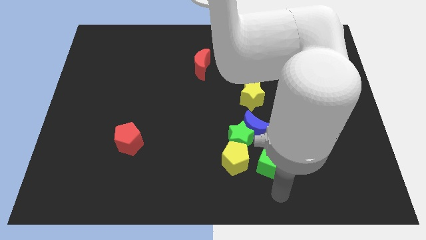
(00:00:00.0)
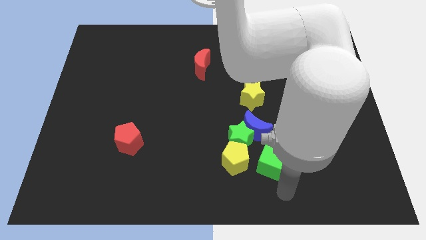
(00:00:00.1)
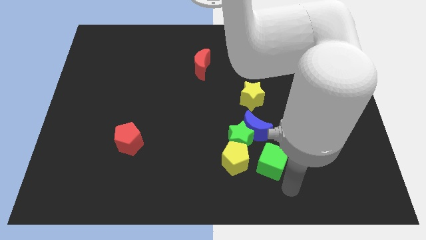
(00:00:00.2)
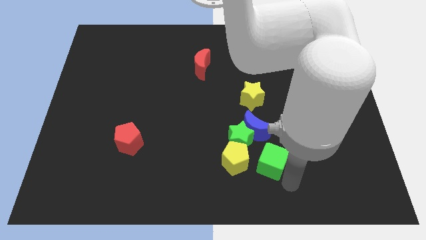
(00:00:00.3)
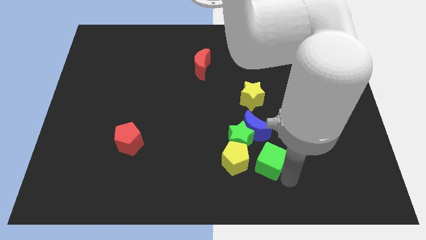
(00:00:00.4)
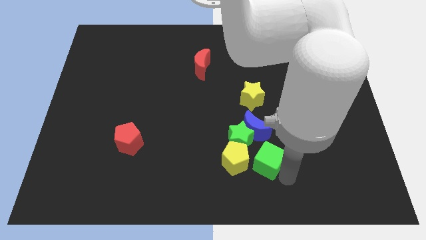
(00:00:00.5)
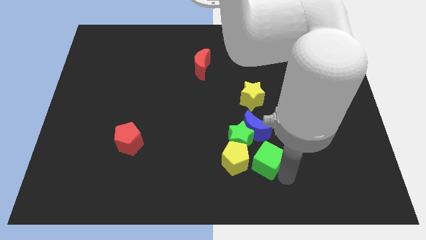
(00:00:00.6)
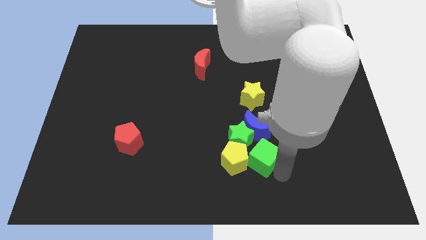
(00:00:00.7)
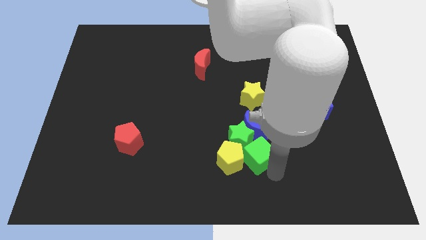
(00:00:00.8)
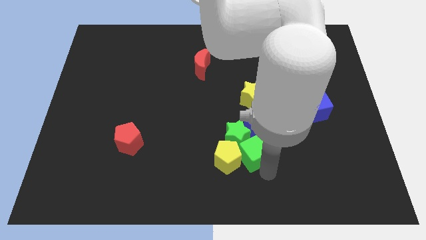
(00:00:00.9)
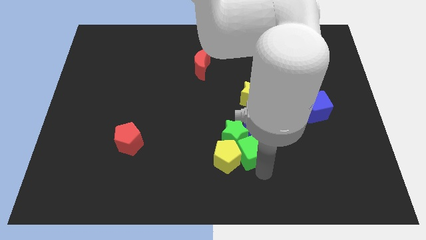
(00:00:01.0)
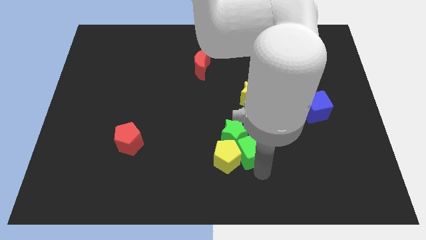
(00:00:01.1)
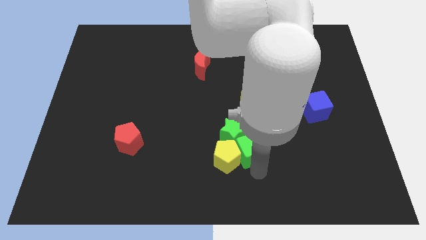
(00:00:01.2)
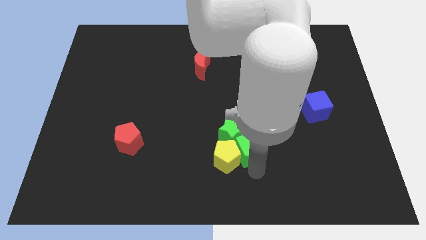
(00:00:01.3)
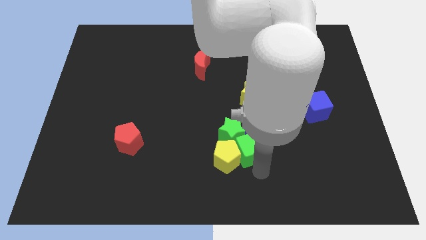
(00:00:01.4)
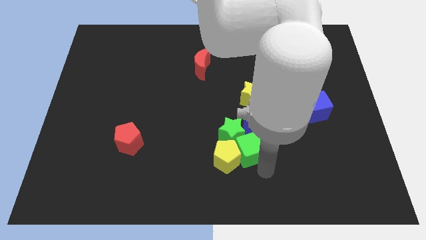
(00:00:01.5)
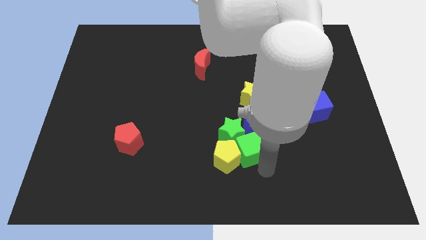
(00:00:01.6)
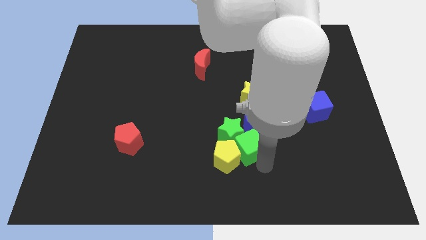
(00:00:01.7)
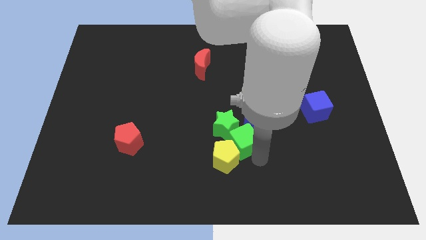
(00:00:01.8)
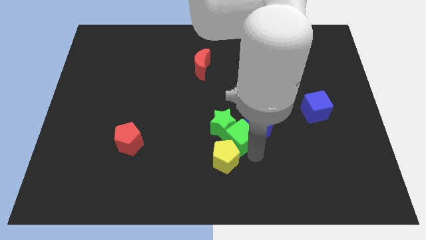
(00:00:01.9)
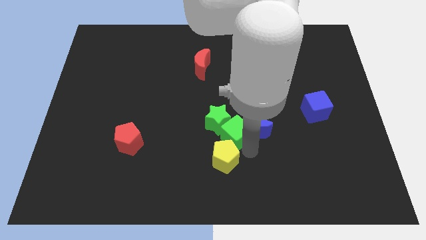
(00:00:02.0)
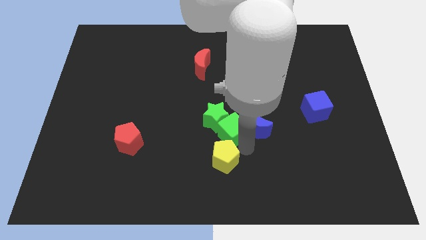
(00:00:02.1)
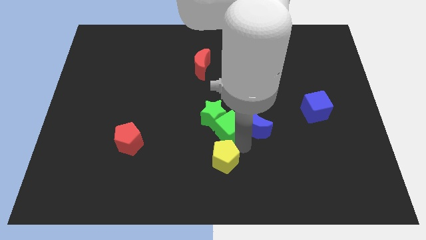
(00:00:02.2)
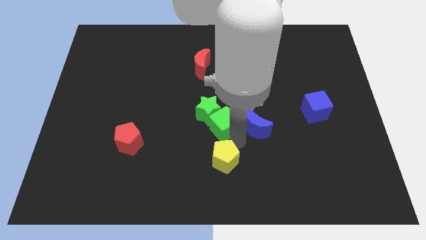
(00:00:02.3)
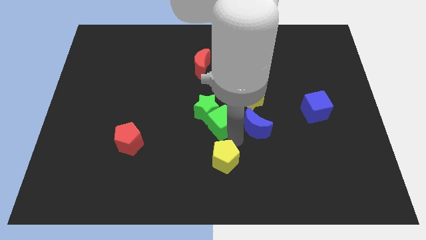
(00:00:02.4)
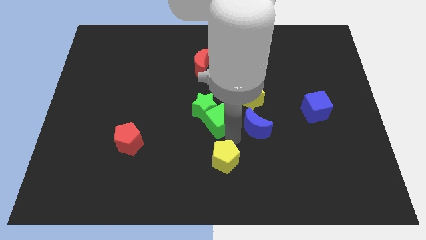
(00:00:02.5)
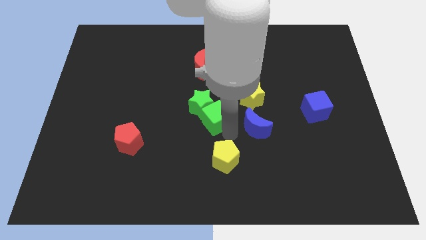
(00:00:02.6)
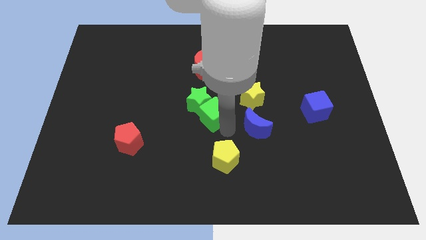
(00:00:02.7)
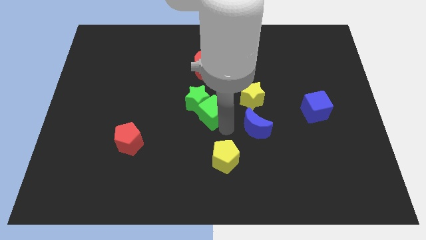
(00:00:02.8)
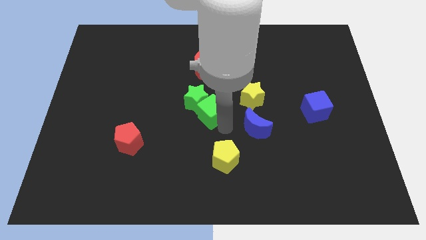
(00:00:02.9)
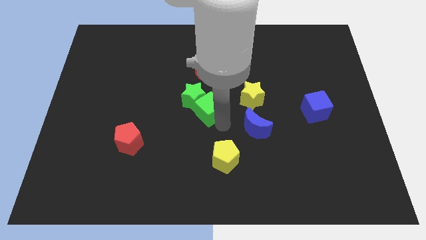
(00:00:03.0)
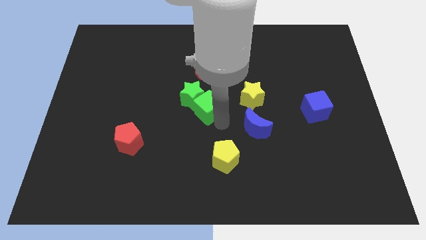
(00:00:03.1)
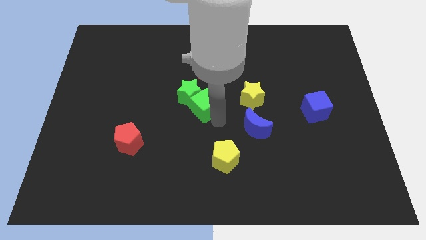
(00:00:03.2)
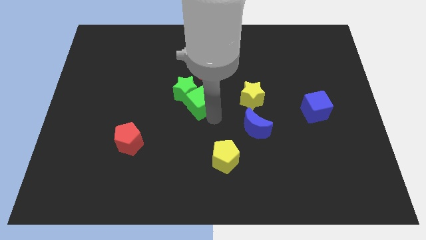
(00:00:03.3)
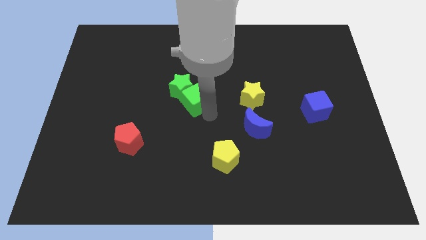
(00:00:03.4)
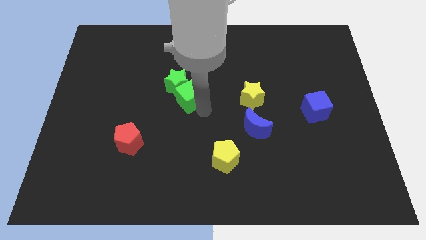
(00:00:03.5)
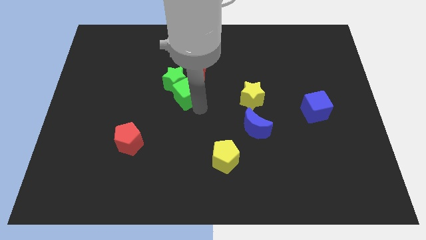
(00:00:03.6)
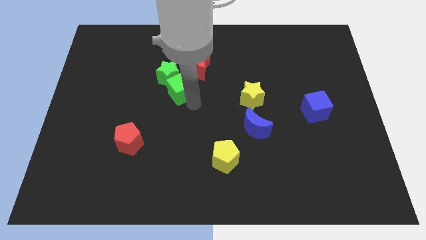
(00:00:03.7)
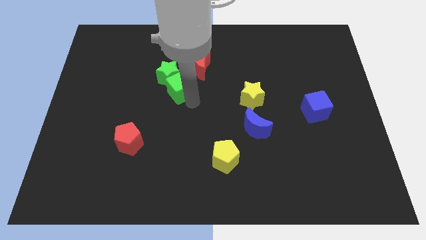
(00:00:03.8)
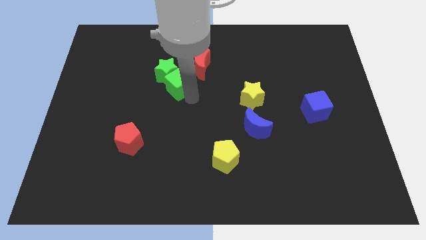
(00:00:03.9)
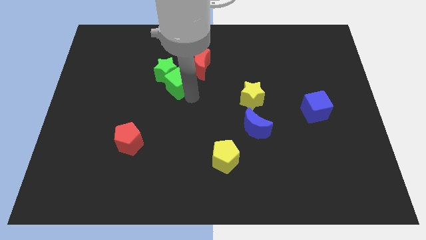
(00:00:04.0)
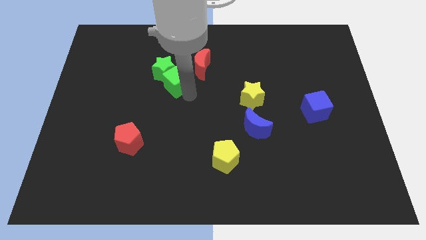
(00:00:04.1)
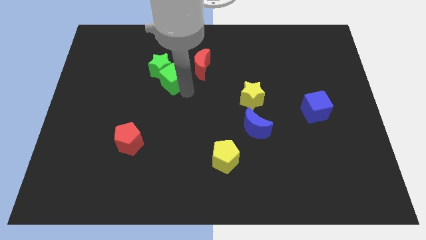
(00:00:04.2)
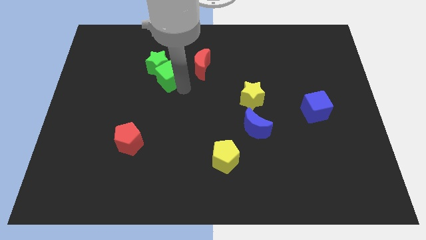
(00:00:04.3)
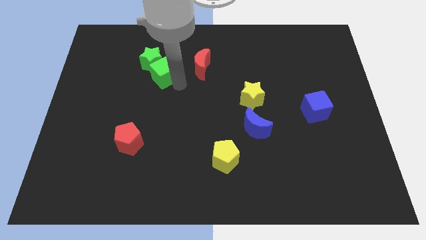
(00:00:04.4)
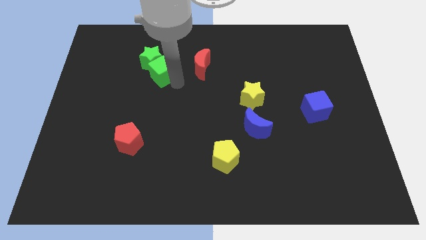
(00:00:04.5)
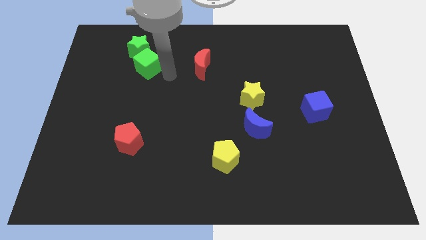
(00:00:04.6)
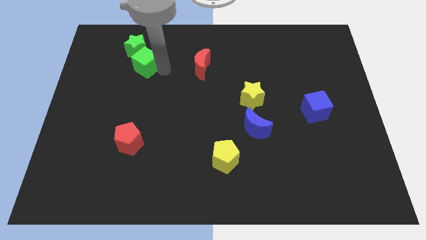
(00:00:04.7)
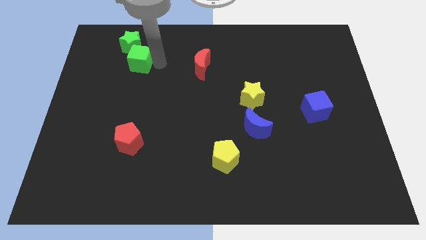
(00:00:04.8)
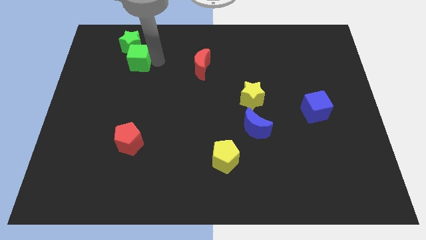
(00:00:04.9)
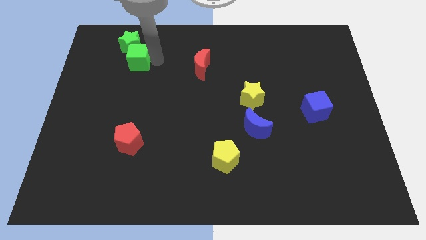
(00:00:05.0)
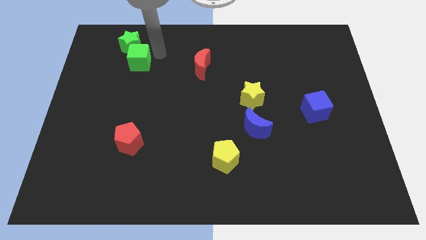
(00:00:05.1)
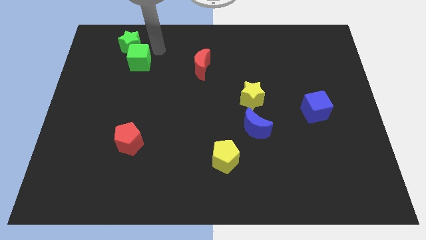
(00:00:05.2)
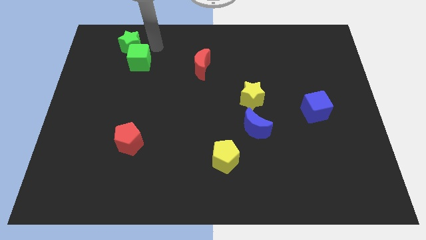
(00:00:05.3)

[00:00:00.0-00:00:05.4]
push the green cube towards the top left corner

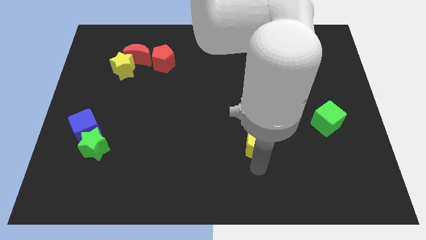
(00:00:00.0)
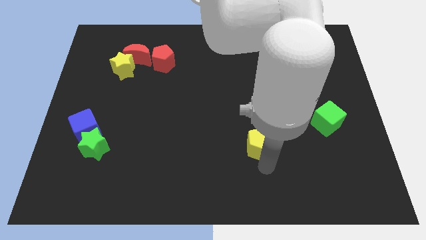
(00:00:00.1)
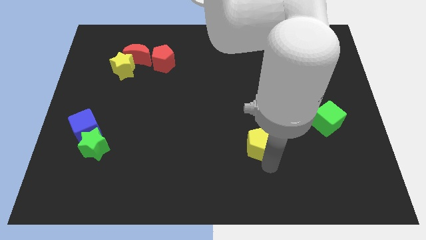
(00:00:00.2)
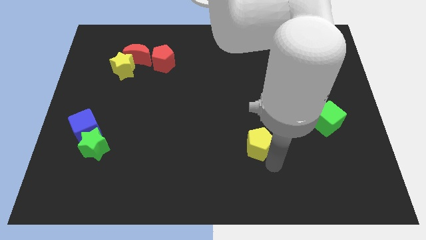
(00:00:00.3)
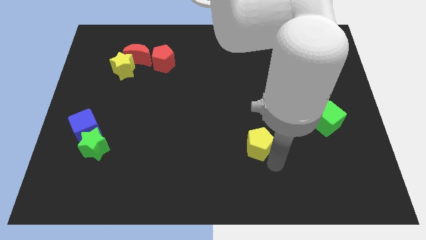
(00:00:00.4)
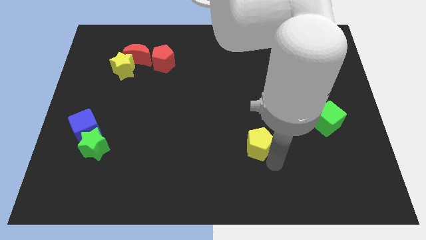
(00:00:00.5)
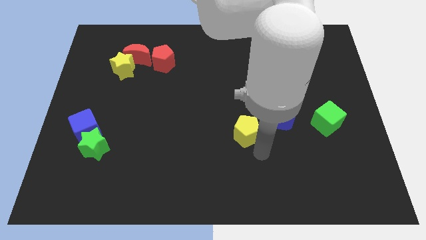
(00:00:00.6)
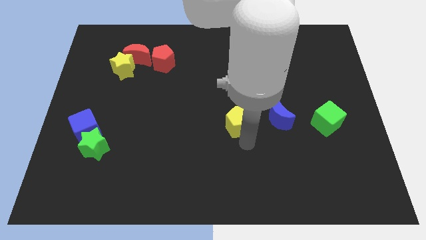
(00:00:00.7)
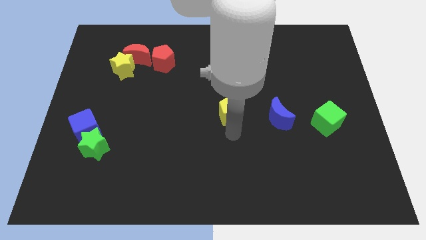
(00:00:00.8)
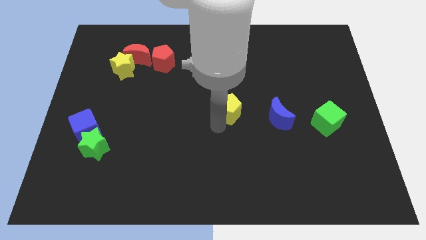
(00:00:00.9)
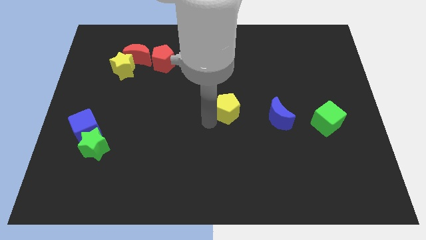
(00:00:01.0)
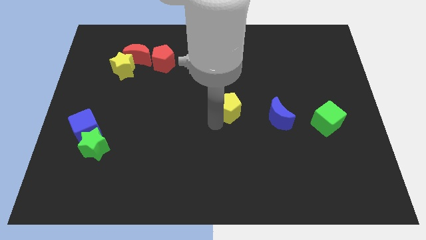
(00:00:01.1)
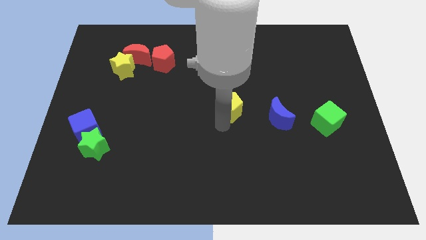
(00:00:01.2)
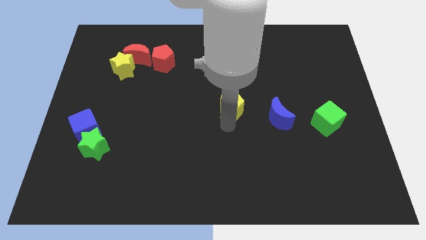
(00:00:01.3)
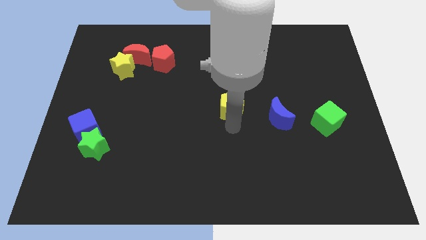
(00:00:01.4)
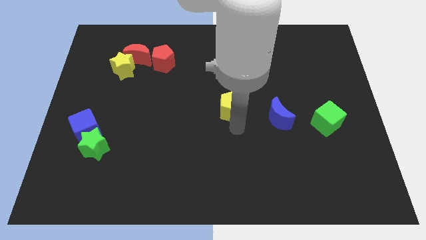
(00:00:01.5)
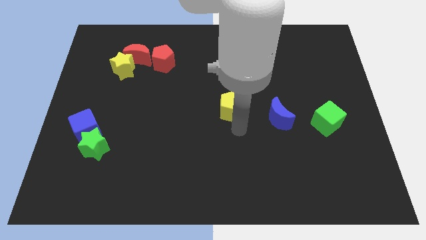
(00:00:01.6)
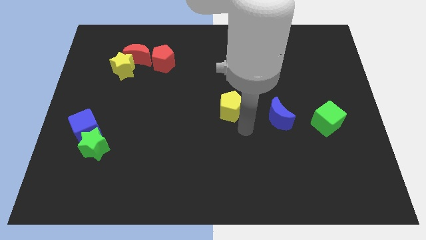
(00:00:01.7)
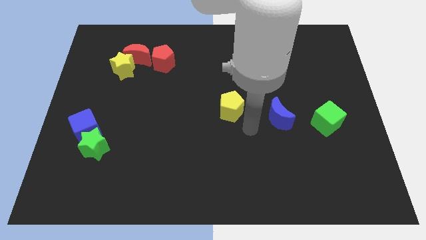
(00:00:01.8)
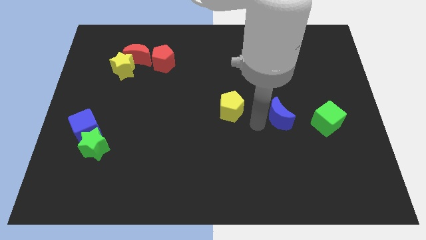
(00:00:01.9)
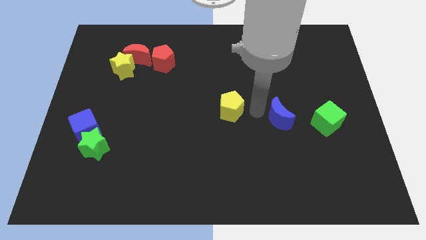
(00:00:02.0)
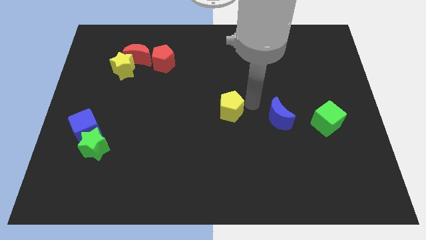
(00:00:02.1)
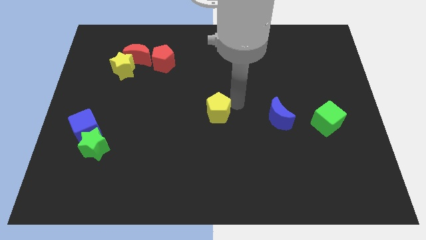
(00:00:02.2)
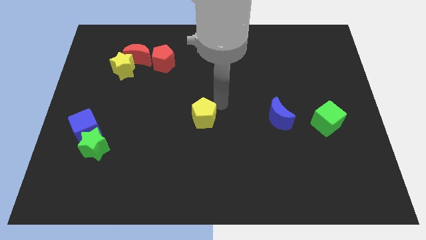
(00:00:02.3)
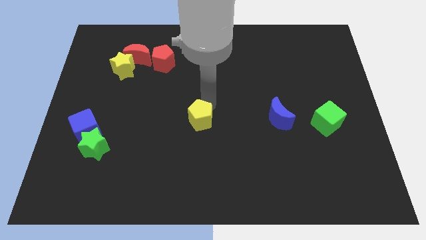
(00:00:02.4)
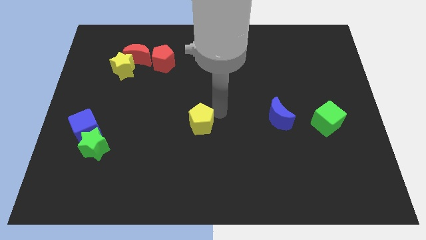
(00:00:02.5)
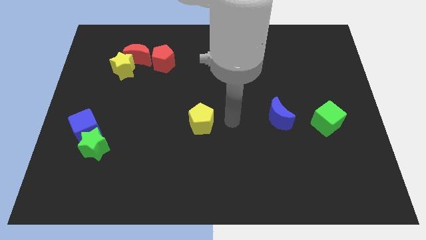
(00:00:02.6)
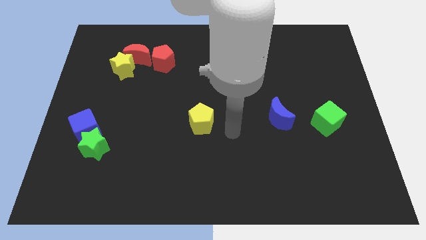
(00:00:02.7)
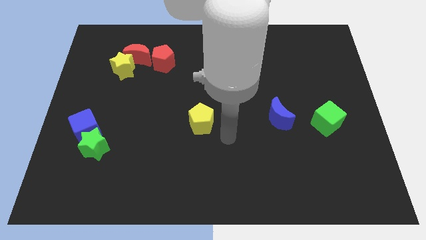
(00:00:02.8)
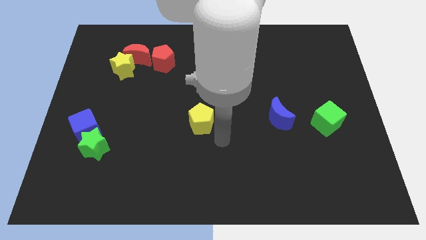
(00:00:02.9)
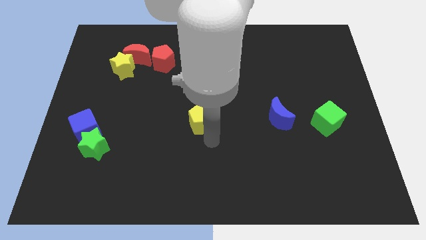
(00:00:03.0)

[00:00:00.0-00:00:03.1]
place yellow pentagon at the center

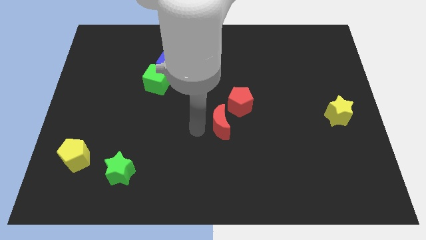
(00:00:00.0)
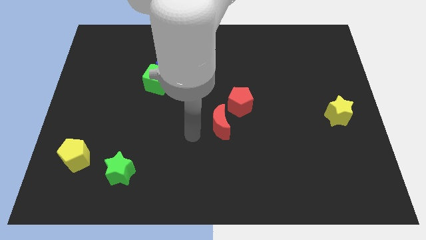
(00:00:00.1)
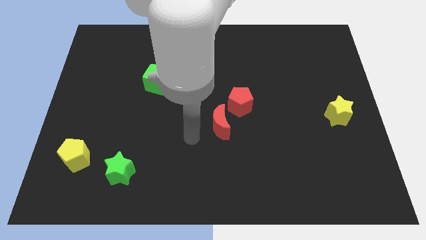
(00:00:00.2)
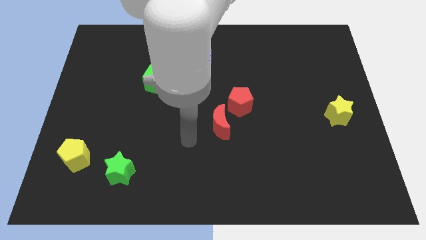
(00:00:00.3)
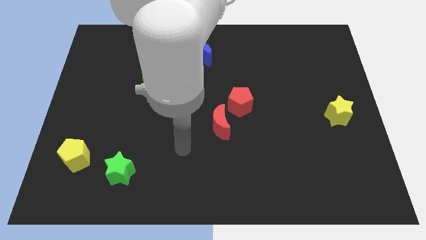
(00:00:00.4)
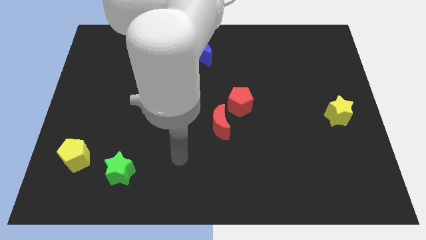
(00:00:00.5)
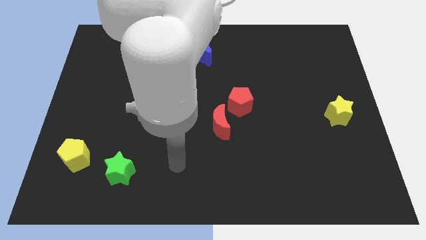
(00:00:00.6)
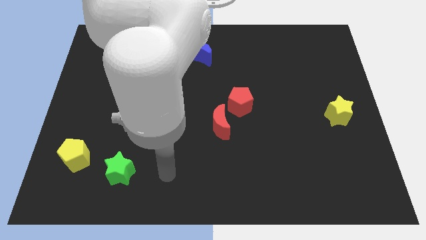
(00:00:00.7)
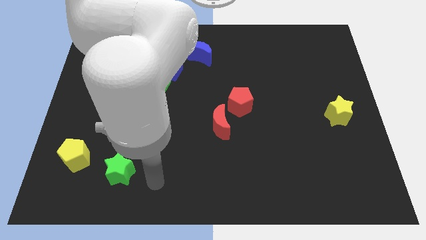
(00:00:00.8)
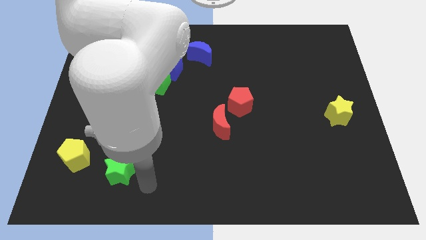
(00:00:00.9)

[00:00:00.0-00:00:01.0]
move arm away from red moon
